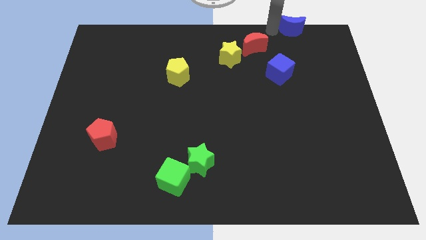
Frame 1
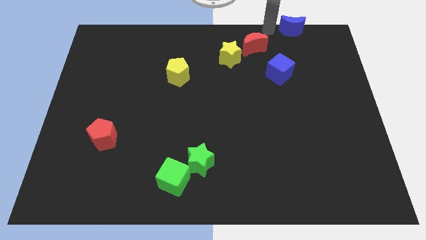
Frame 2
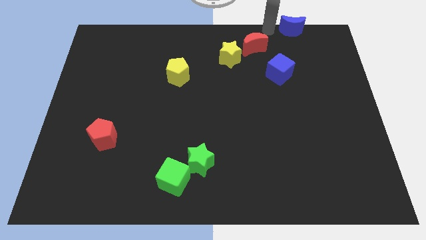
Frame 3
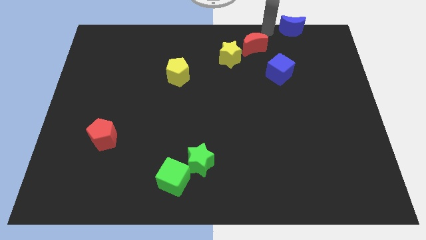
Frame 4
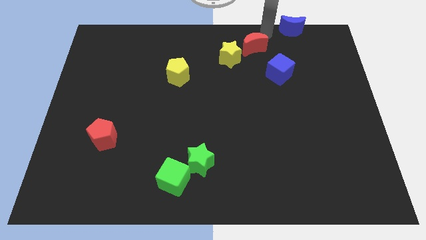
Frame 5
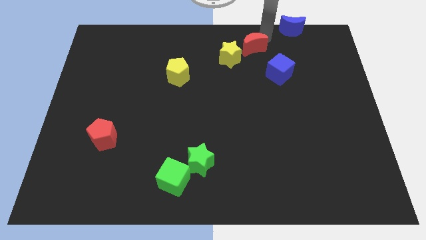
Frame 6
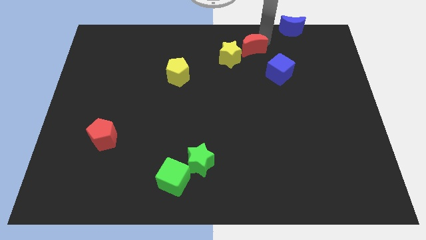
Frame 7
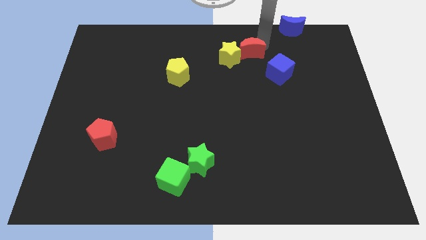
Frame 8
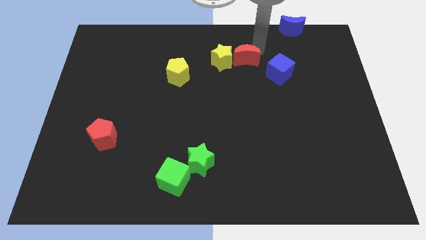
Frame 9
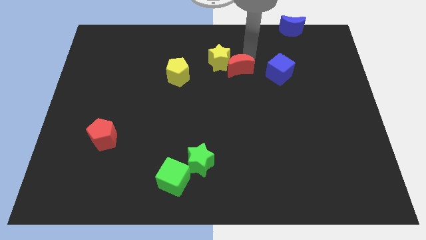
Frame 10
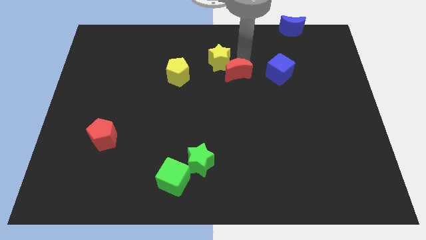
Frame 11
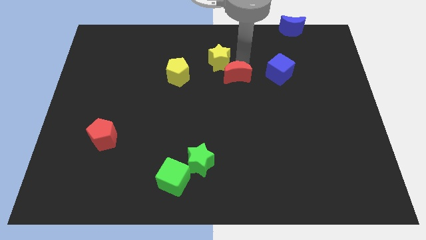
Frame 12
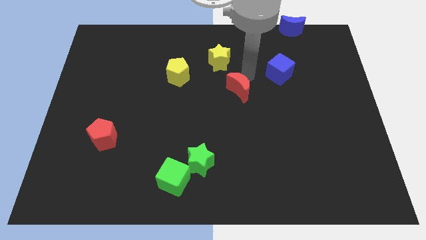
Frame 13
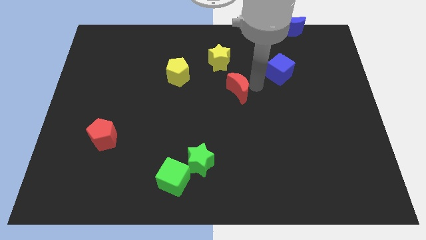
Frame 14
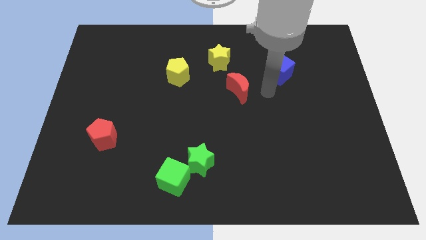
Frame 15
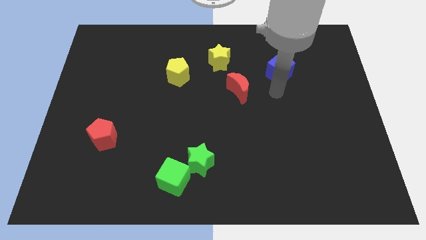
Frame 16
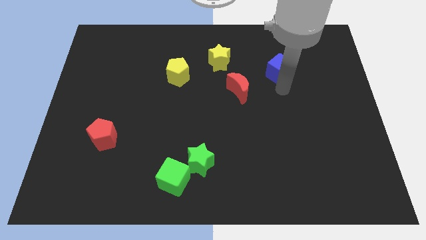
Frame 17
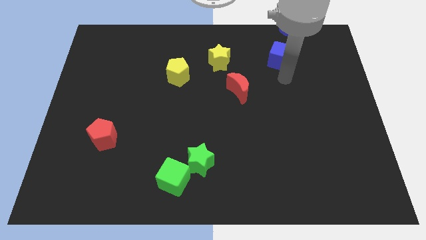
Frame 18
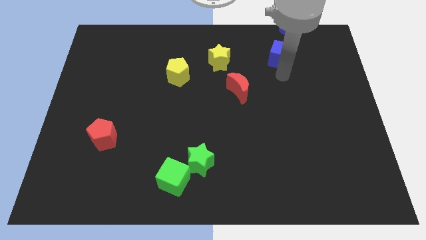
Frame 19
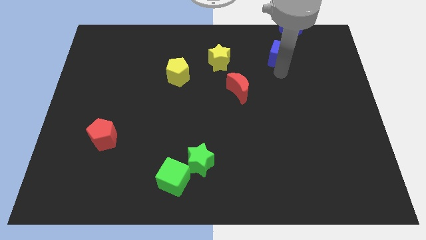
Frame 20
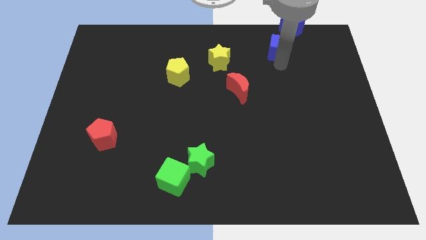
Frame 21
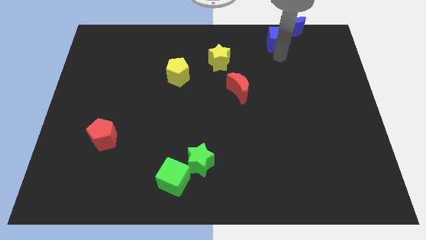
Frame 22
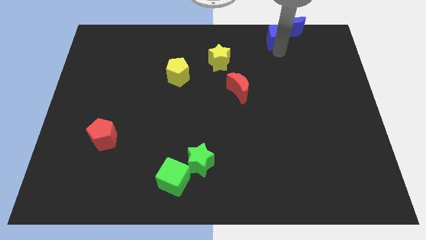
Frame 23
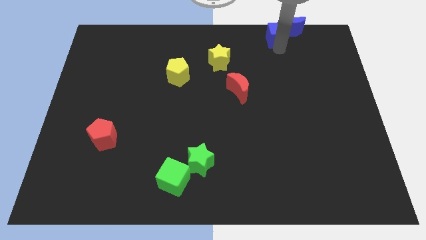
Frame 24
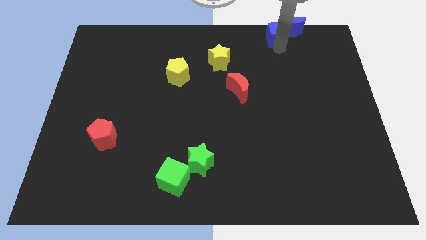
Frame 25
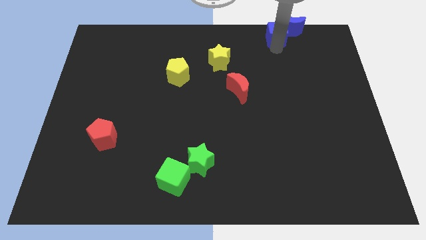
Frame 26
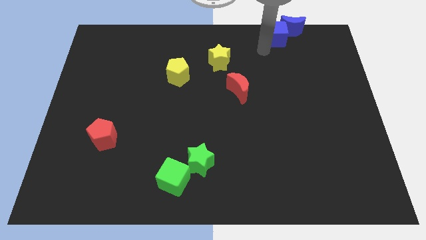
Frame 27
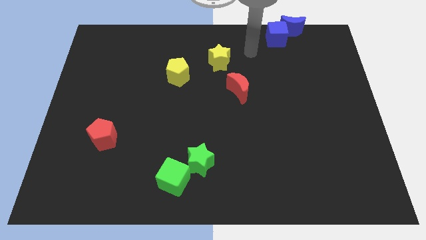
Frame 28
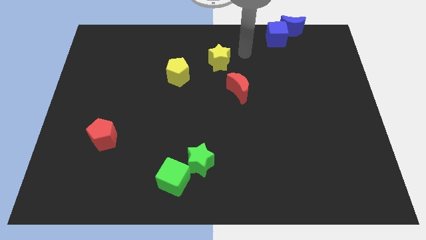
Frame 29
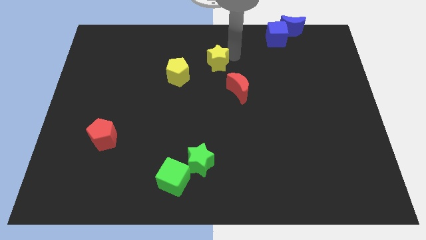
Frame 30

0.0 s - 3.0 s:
push the red moon and blue cube diagonally to the bottom left side of the blue crescent

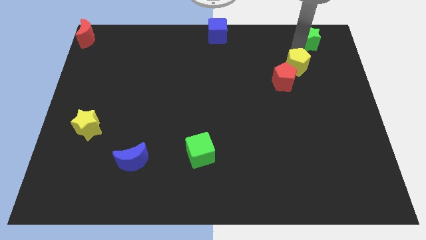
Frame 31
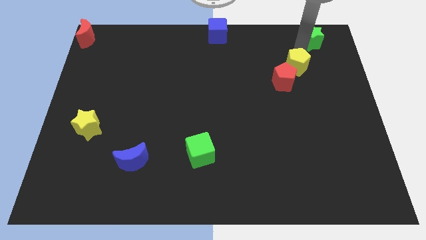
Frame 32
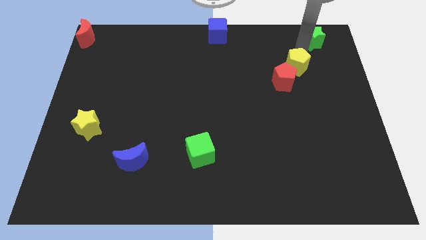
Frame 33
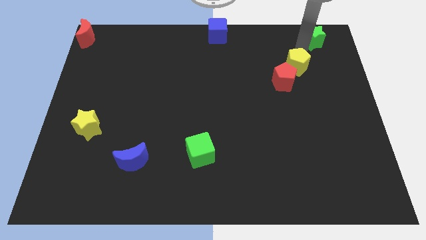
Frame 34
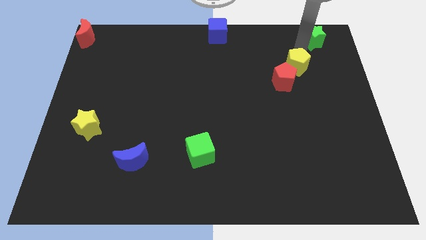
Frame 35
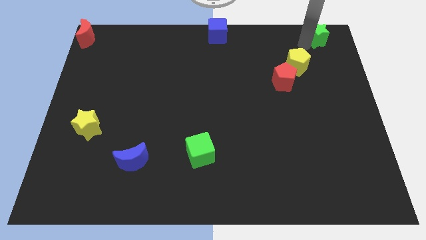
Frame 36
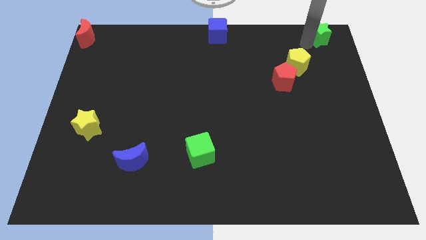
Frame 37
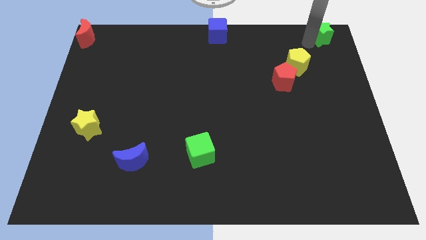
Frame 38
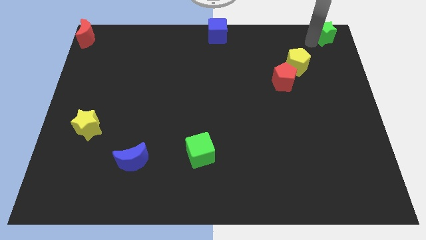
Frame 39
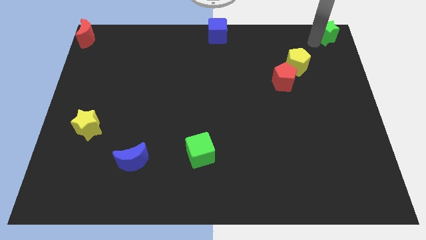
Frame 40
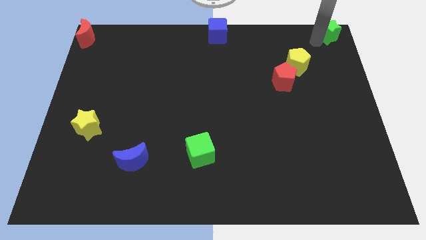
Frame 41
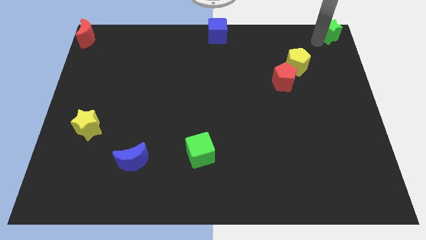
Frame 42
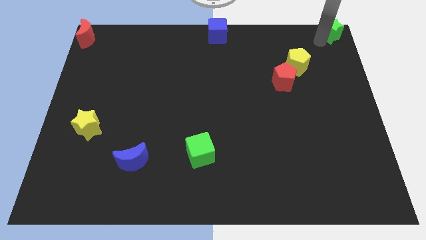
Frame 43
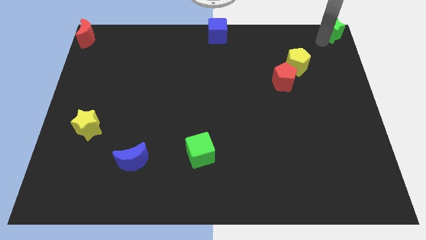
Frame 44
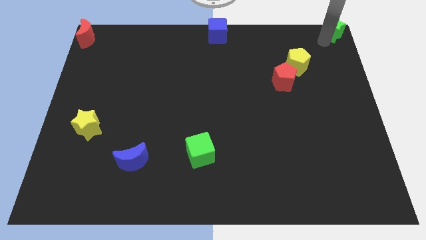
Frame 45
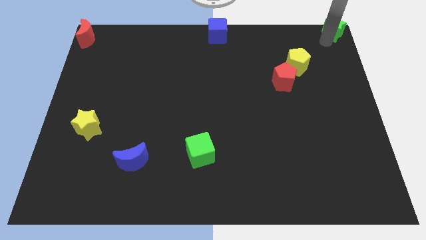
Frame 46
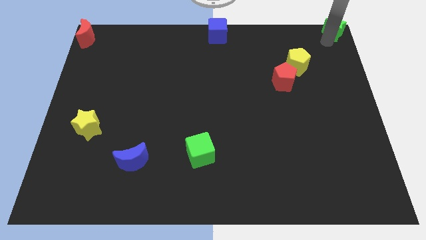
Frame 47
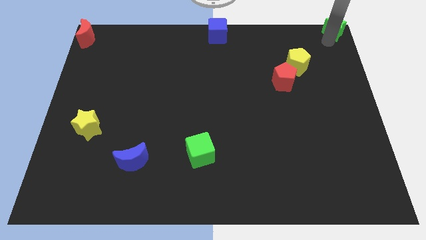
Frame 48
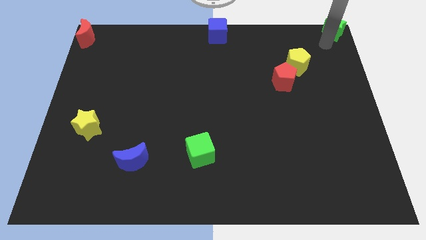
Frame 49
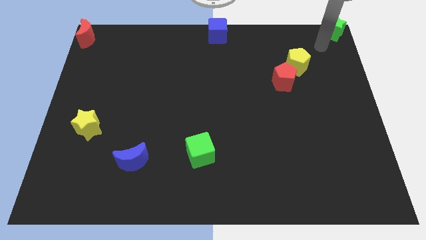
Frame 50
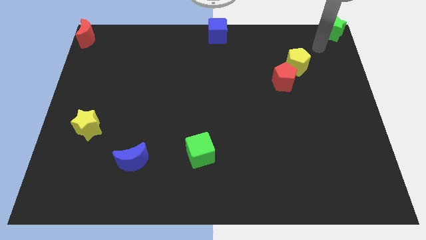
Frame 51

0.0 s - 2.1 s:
move the green star to the top right corner

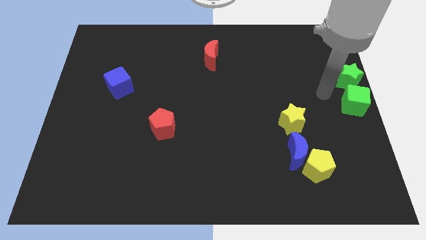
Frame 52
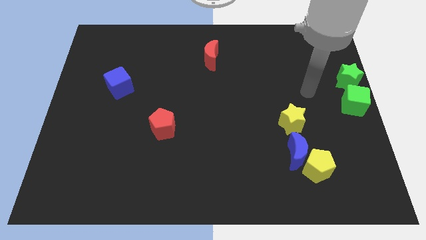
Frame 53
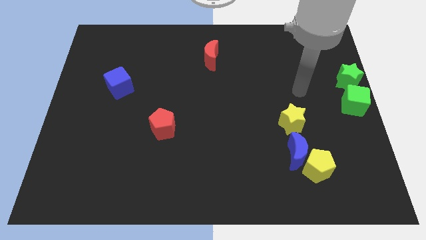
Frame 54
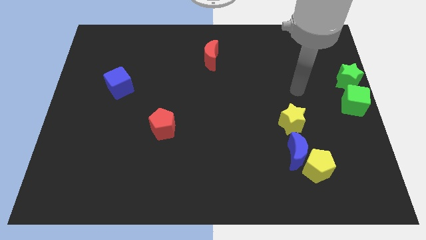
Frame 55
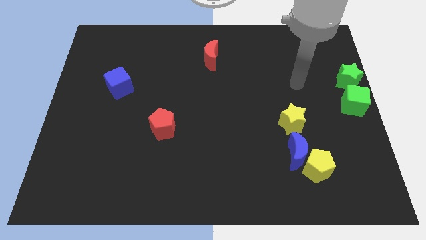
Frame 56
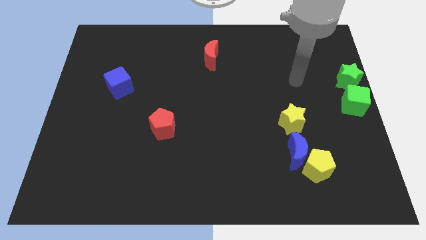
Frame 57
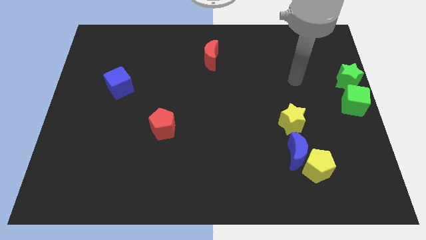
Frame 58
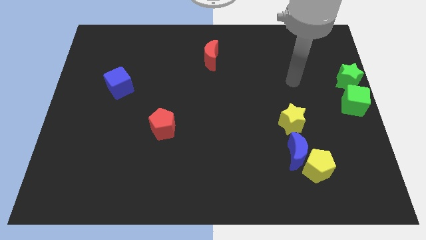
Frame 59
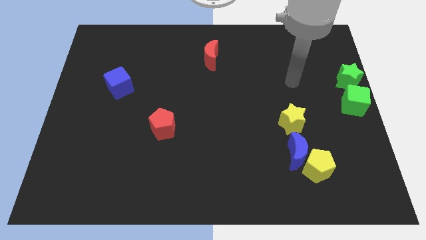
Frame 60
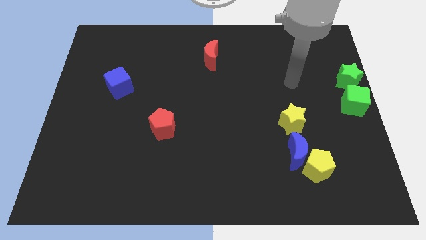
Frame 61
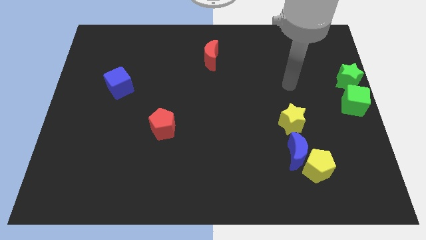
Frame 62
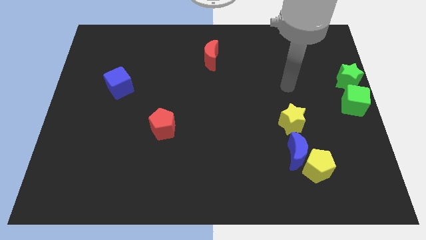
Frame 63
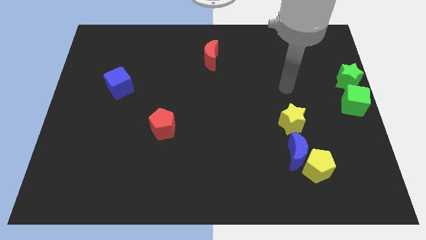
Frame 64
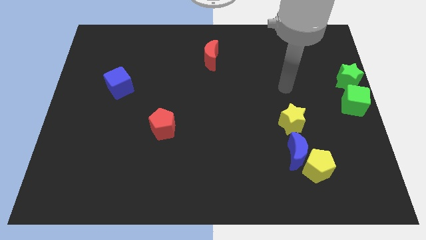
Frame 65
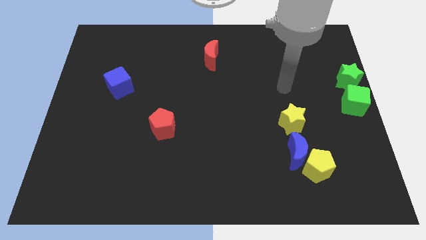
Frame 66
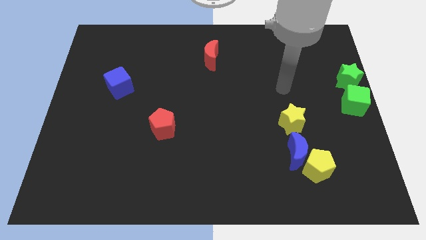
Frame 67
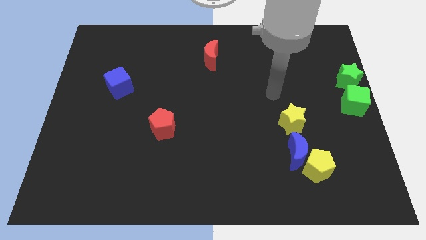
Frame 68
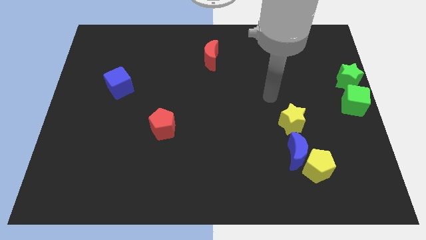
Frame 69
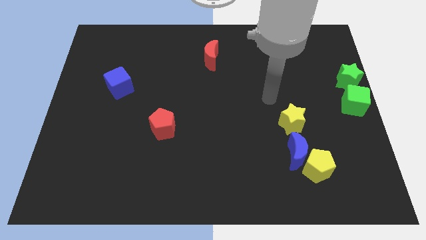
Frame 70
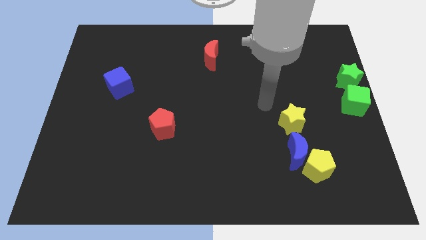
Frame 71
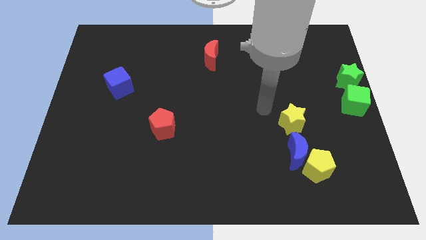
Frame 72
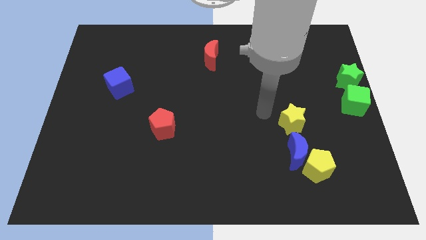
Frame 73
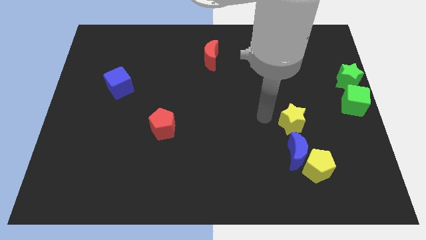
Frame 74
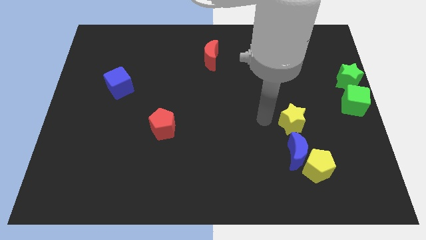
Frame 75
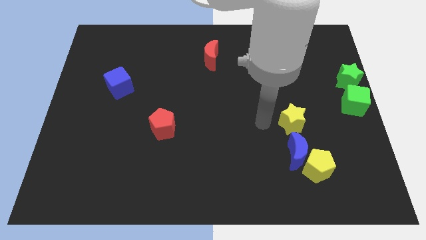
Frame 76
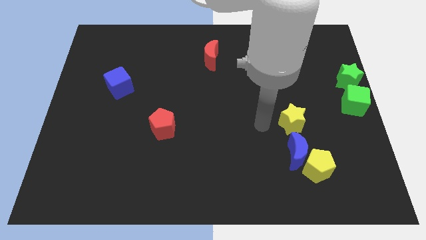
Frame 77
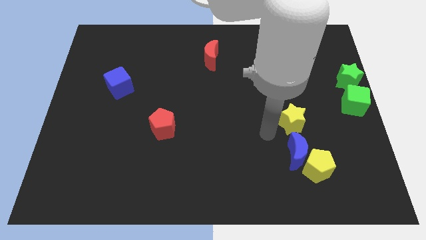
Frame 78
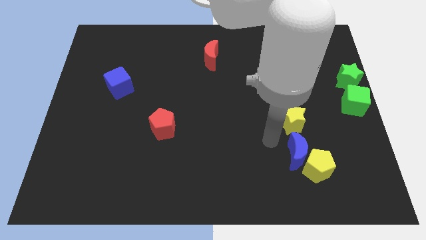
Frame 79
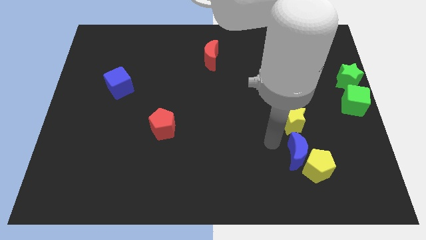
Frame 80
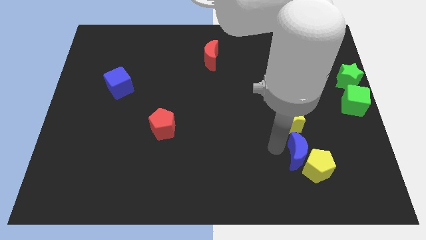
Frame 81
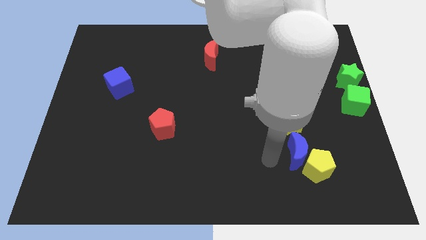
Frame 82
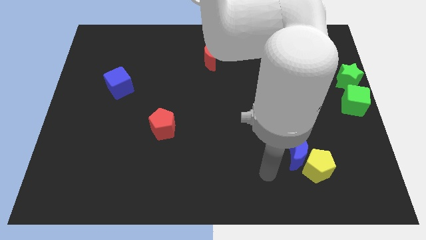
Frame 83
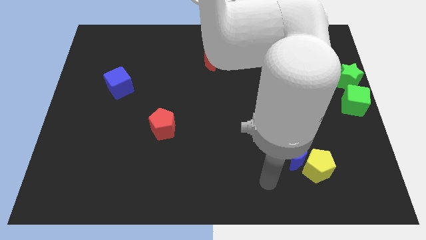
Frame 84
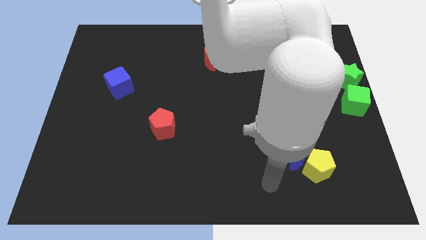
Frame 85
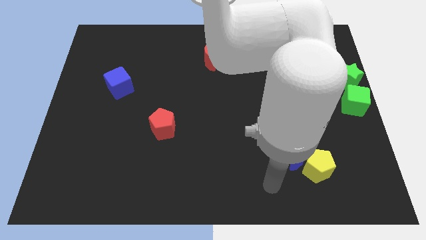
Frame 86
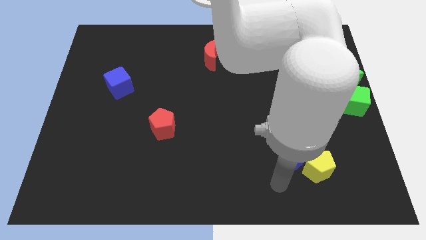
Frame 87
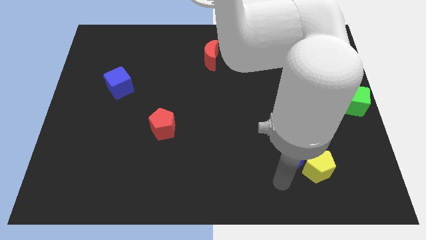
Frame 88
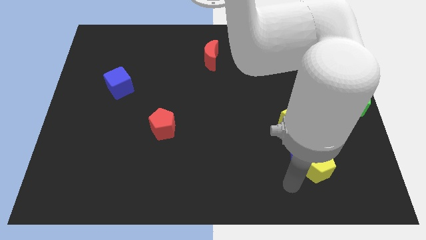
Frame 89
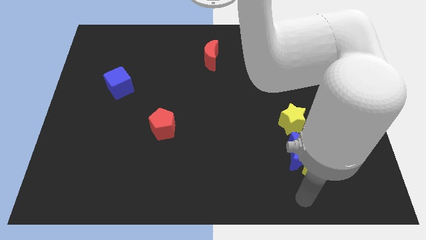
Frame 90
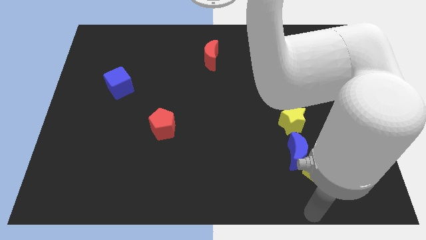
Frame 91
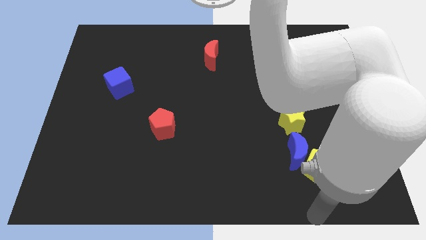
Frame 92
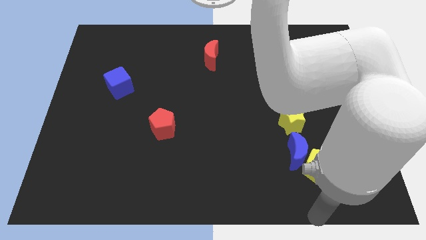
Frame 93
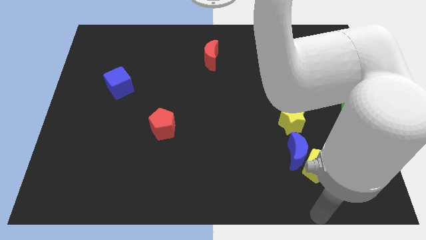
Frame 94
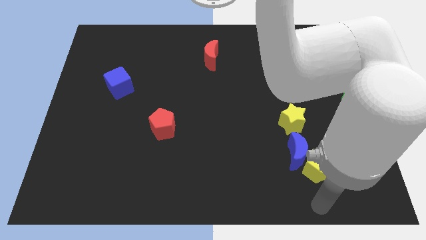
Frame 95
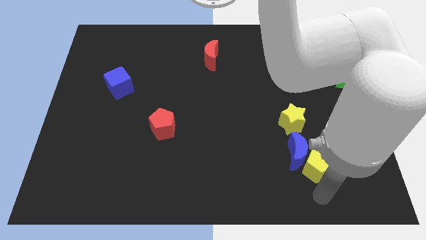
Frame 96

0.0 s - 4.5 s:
move your arm towards the yellow pentagon
